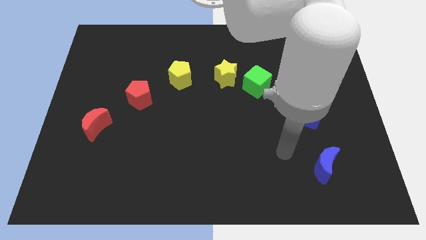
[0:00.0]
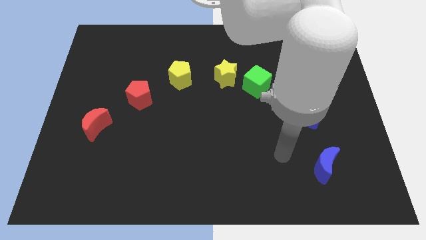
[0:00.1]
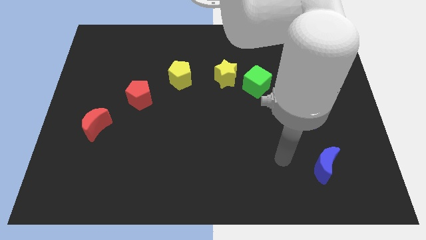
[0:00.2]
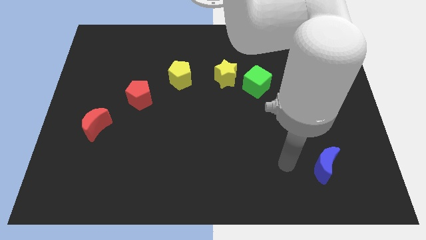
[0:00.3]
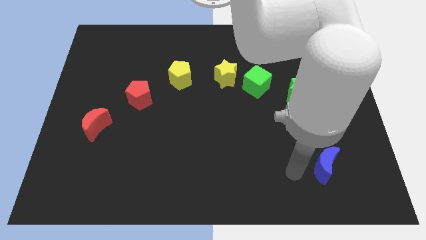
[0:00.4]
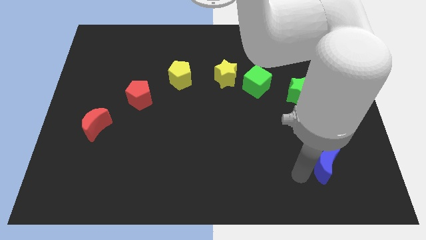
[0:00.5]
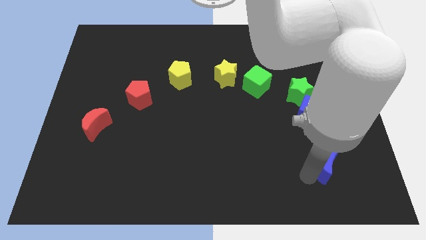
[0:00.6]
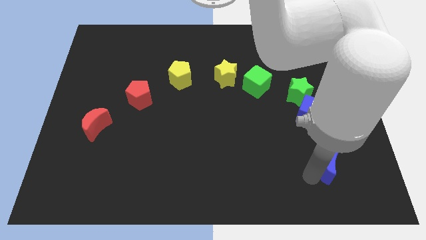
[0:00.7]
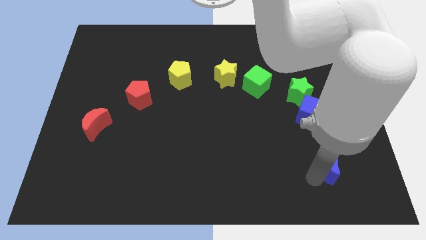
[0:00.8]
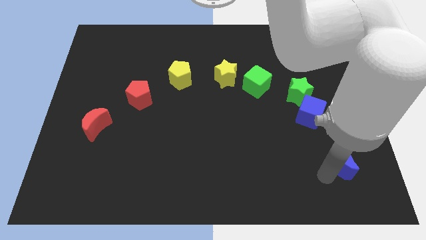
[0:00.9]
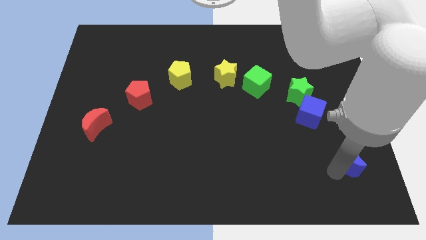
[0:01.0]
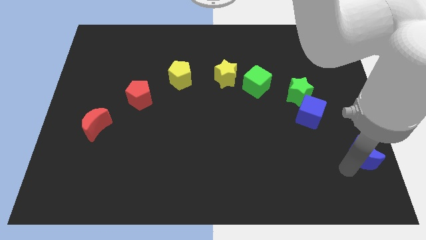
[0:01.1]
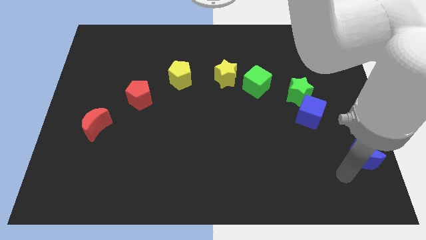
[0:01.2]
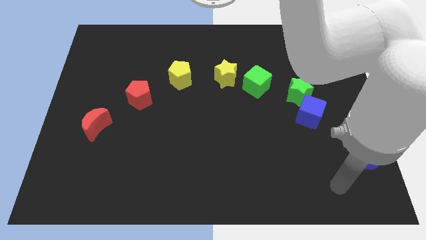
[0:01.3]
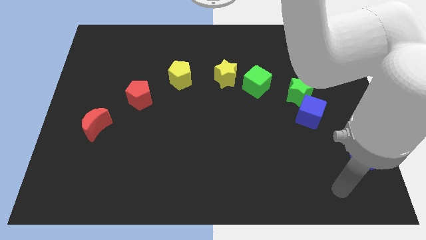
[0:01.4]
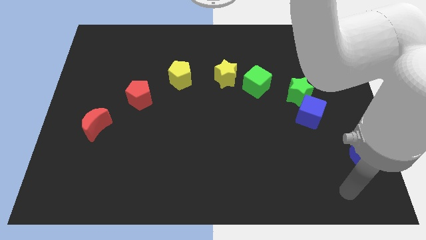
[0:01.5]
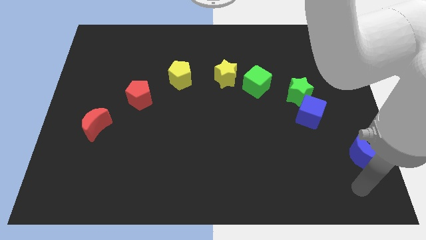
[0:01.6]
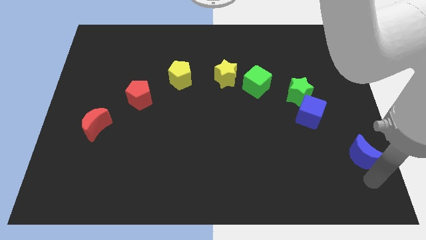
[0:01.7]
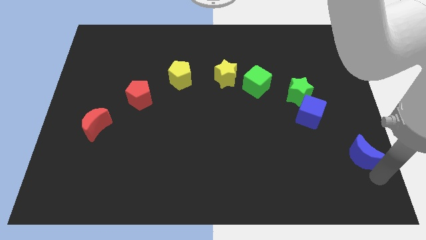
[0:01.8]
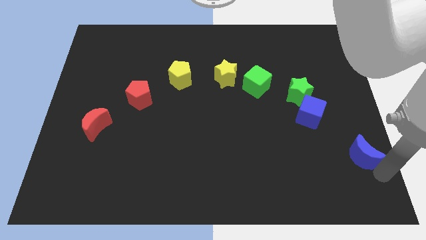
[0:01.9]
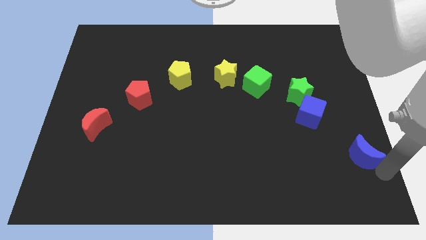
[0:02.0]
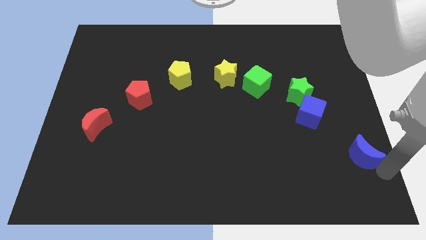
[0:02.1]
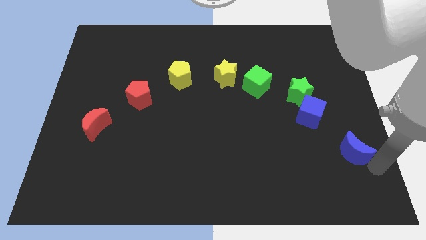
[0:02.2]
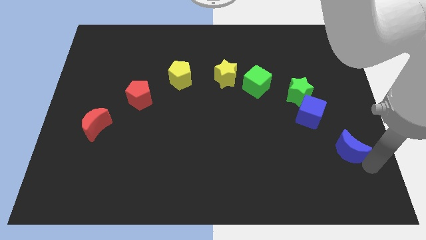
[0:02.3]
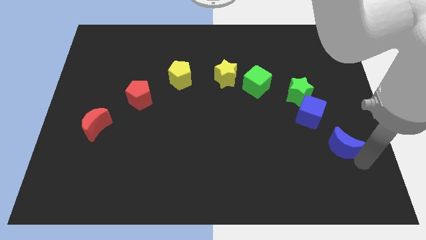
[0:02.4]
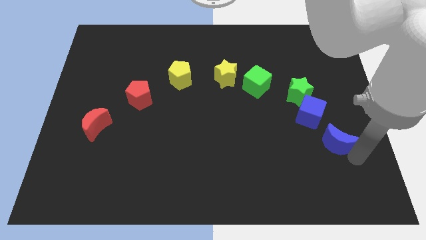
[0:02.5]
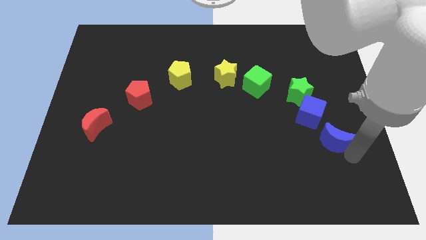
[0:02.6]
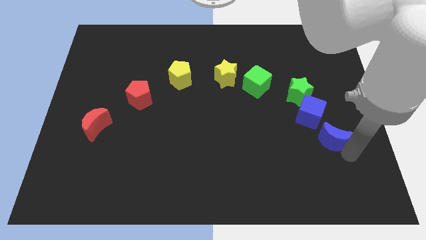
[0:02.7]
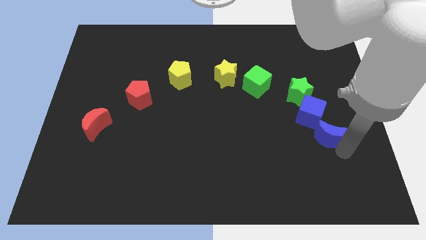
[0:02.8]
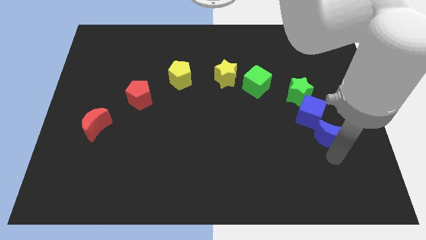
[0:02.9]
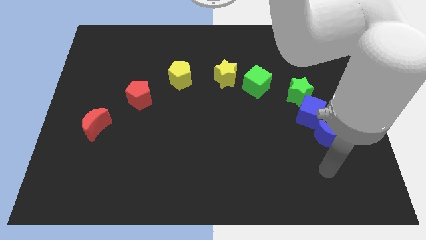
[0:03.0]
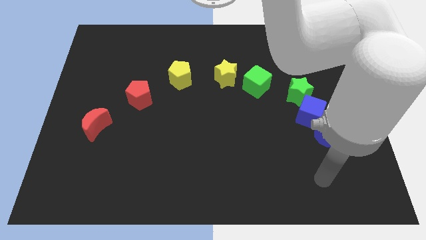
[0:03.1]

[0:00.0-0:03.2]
slide blue moon close to the blue cube

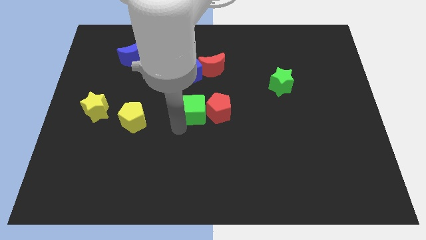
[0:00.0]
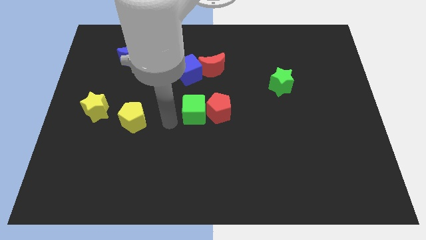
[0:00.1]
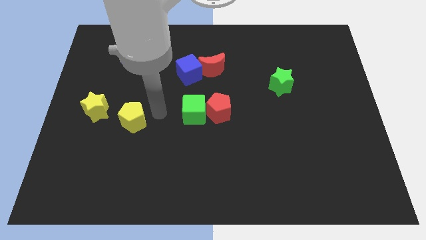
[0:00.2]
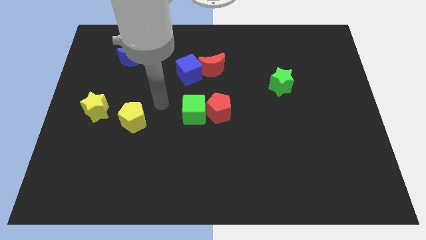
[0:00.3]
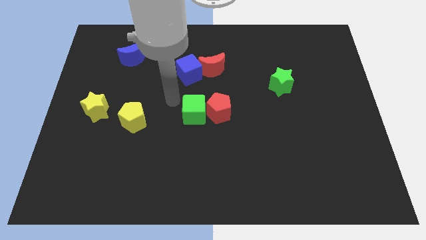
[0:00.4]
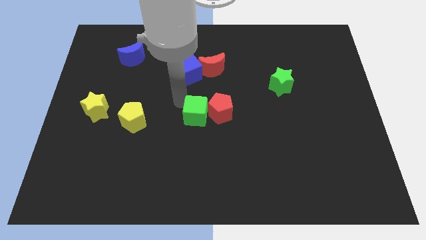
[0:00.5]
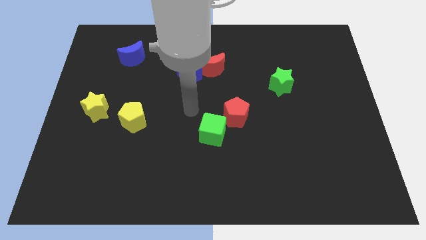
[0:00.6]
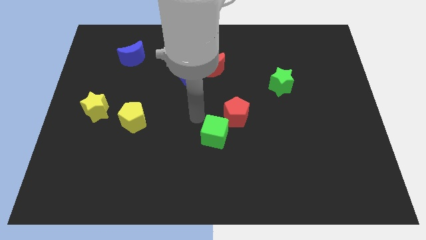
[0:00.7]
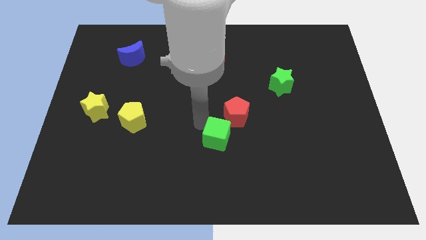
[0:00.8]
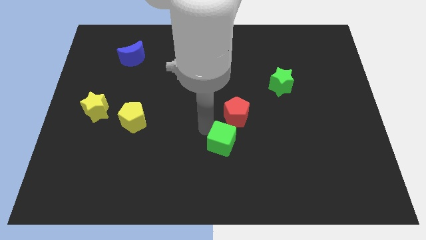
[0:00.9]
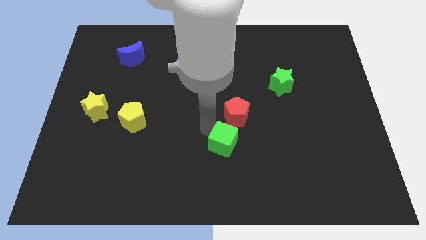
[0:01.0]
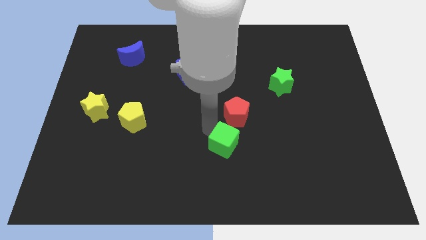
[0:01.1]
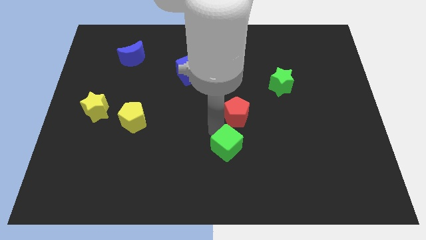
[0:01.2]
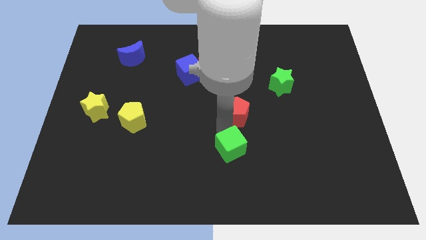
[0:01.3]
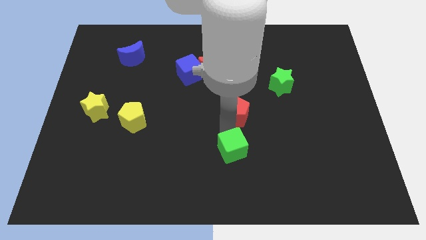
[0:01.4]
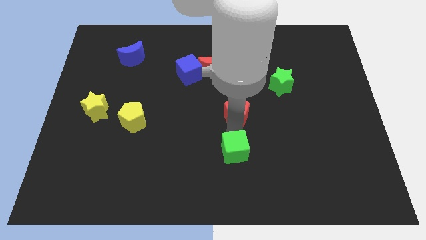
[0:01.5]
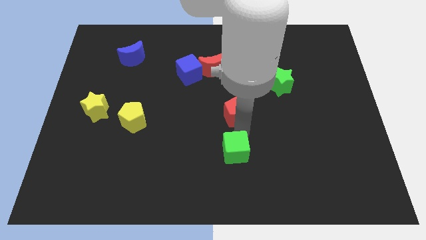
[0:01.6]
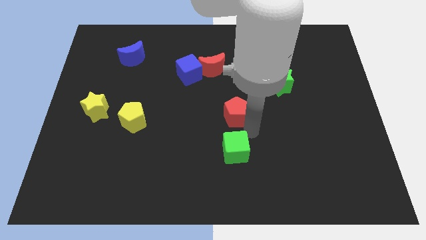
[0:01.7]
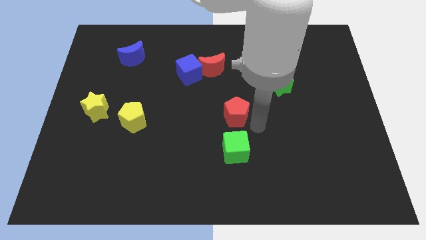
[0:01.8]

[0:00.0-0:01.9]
separate the green cube and red pentagon

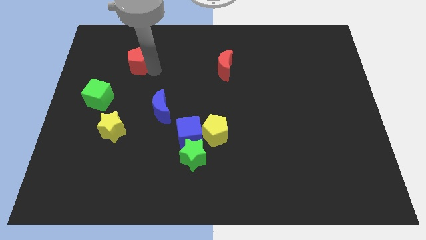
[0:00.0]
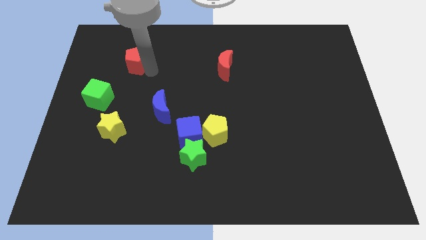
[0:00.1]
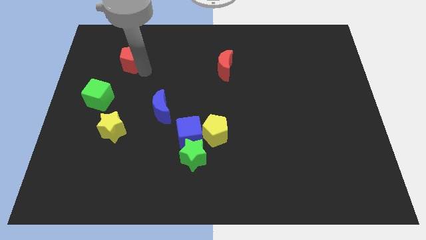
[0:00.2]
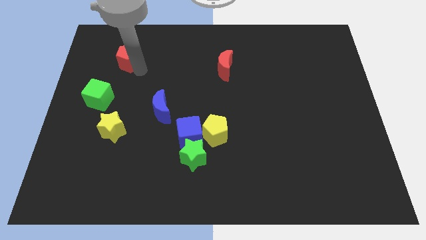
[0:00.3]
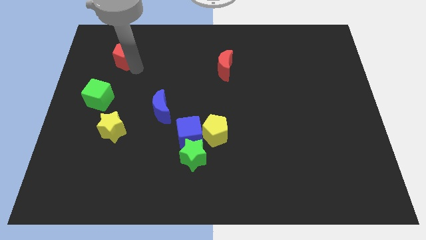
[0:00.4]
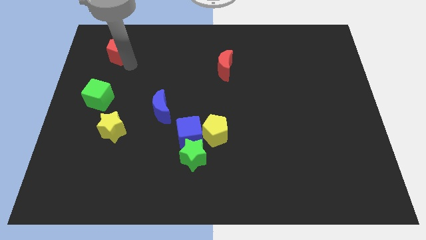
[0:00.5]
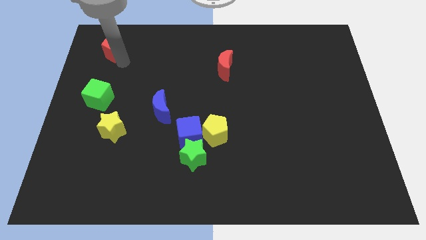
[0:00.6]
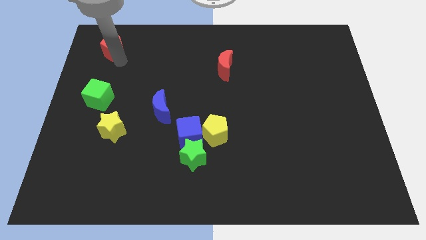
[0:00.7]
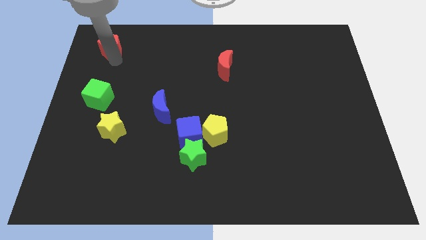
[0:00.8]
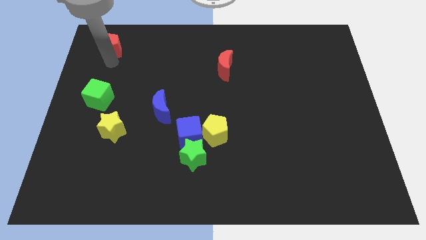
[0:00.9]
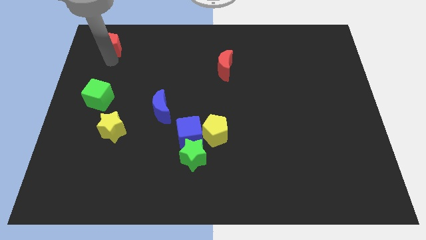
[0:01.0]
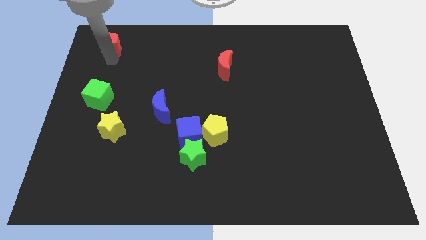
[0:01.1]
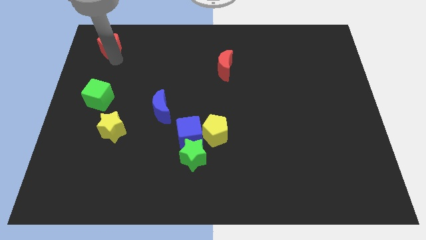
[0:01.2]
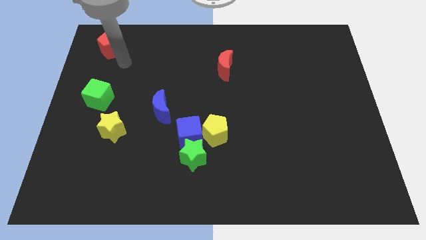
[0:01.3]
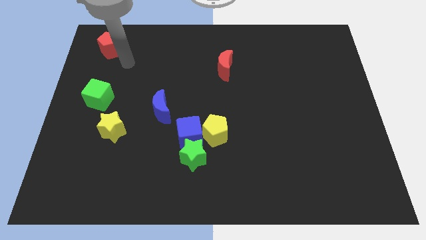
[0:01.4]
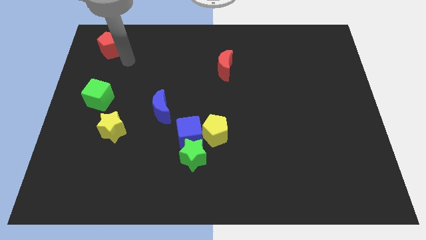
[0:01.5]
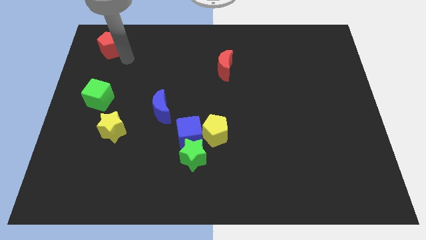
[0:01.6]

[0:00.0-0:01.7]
move red pentagon to the top left

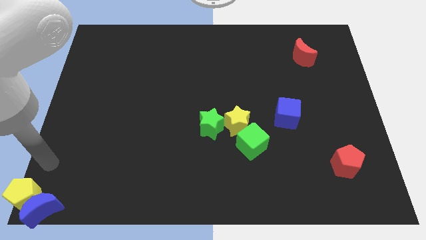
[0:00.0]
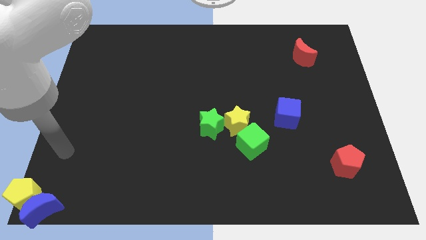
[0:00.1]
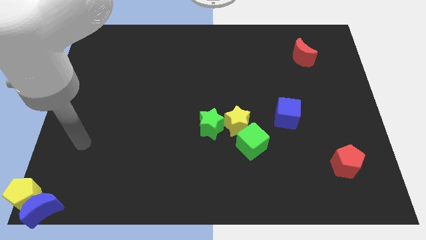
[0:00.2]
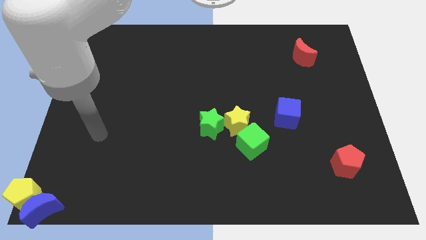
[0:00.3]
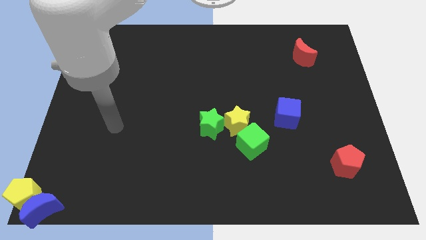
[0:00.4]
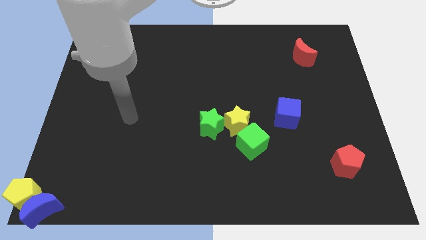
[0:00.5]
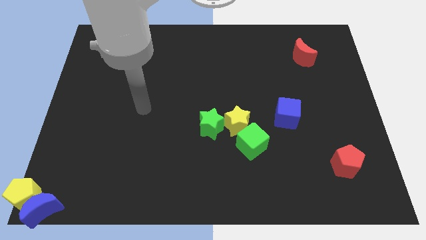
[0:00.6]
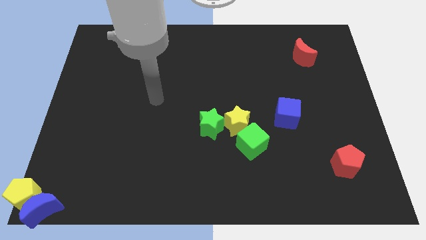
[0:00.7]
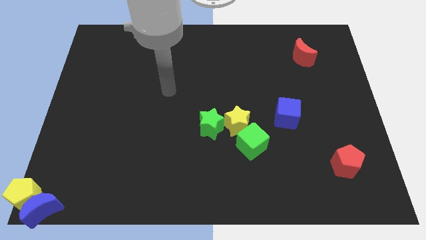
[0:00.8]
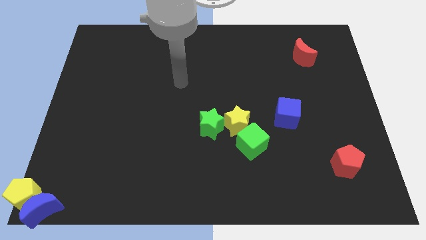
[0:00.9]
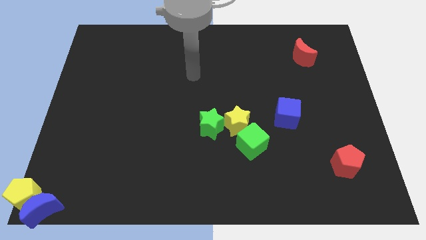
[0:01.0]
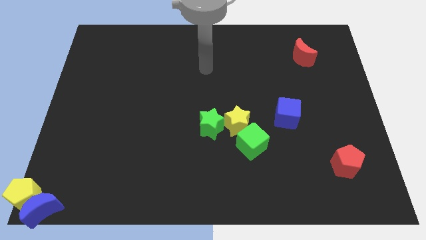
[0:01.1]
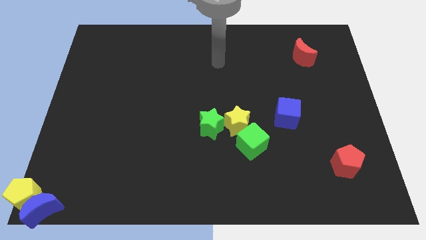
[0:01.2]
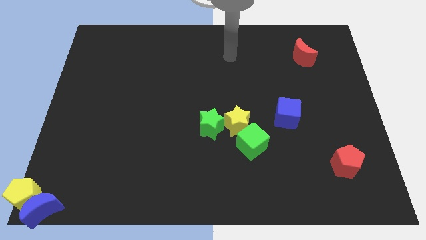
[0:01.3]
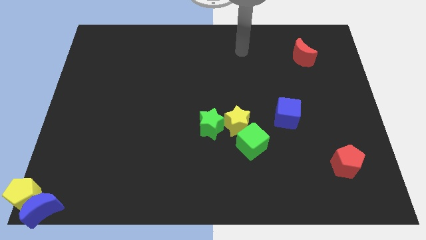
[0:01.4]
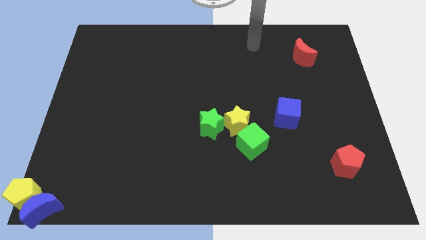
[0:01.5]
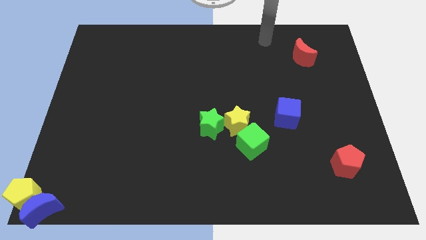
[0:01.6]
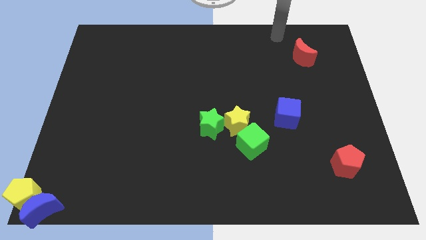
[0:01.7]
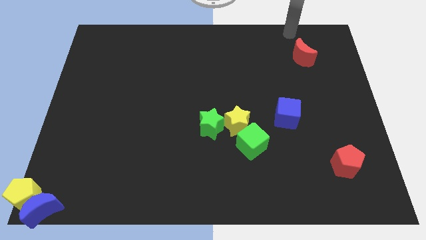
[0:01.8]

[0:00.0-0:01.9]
move away from the yellow pentagon

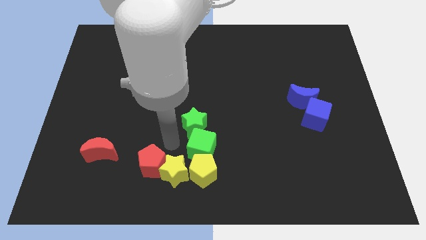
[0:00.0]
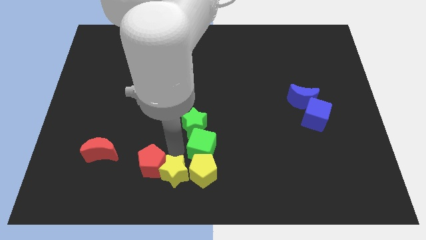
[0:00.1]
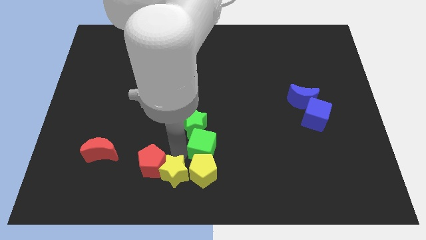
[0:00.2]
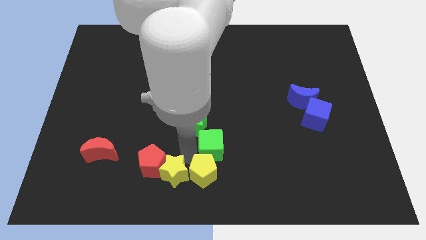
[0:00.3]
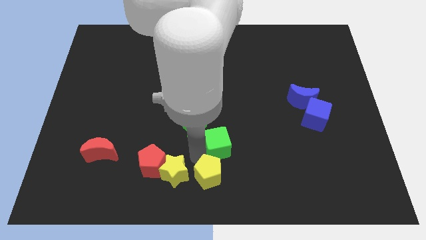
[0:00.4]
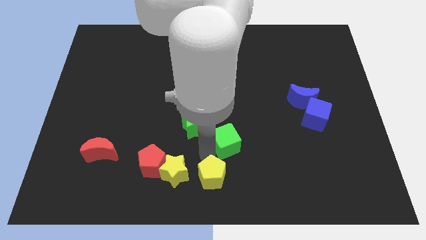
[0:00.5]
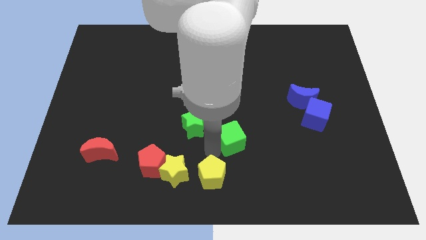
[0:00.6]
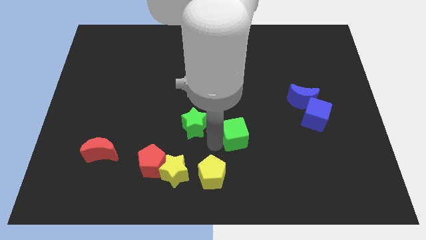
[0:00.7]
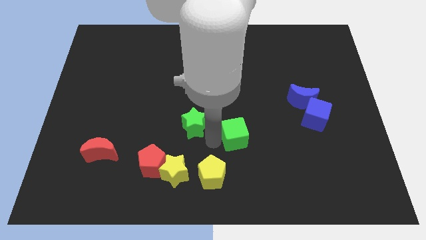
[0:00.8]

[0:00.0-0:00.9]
push the blocks away
